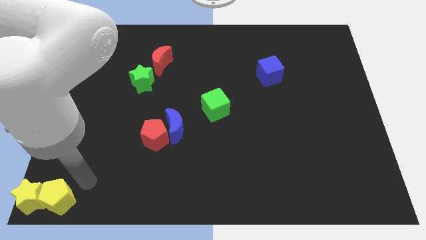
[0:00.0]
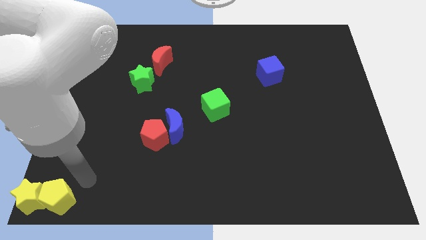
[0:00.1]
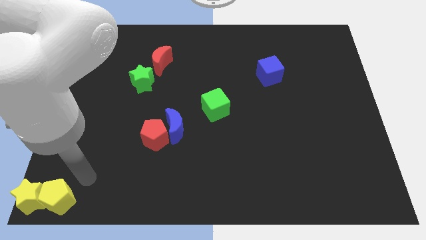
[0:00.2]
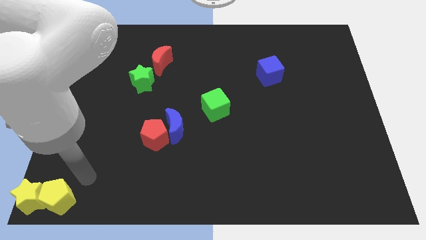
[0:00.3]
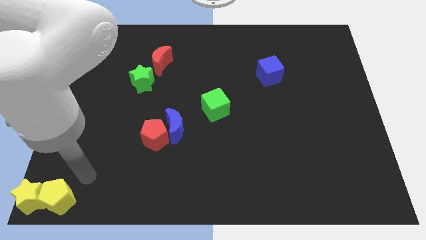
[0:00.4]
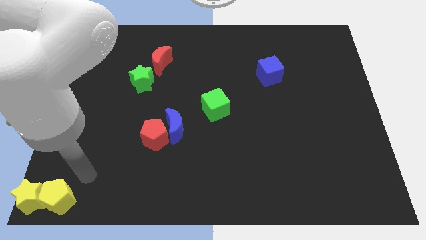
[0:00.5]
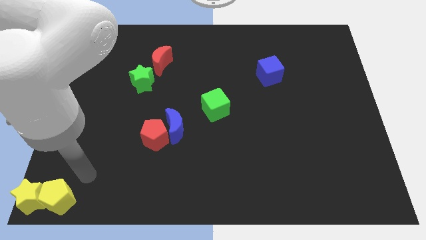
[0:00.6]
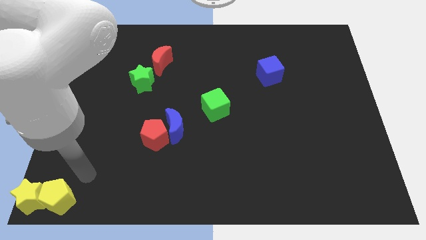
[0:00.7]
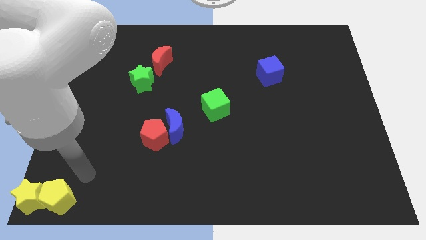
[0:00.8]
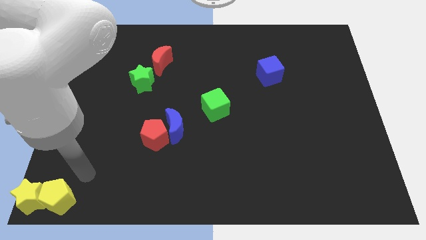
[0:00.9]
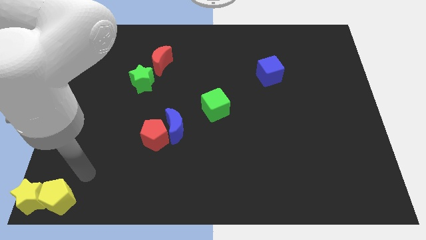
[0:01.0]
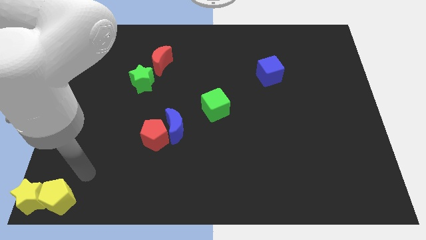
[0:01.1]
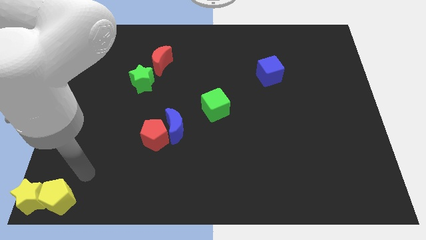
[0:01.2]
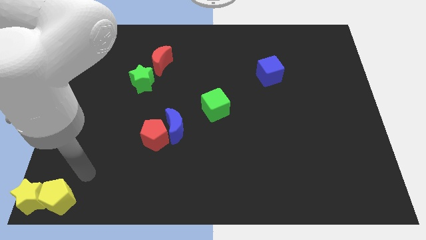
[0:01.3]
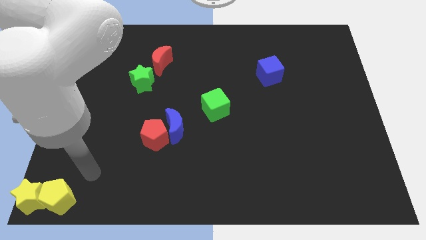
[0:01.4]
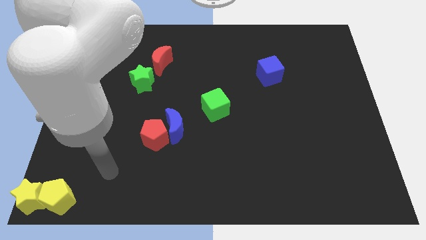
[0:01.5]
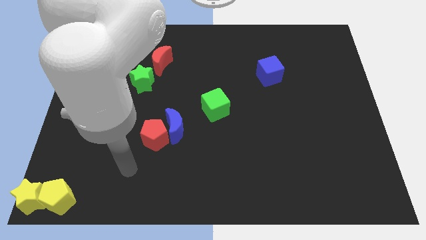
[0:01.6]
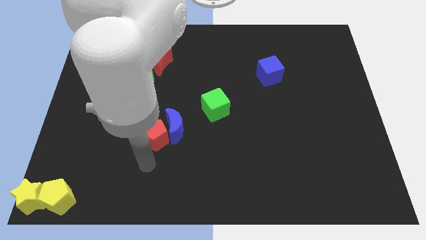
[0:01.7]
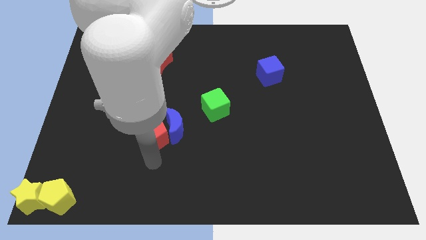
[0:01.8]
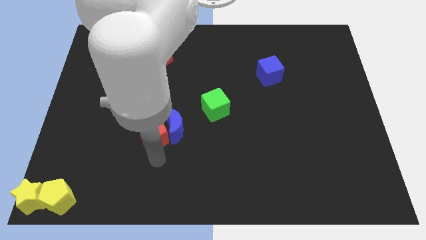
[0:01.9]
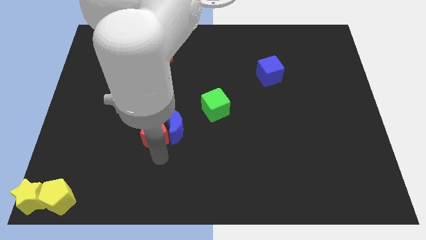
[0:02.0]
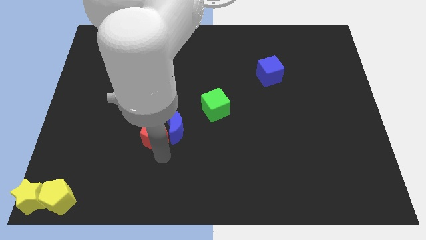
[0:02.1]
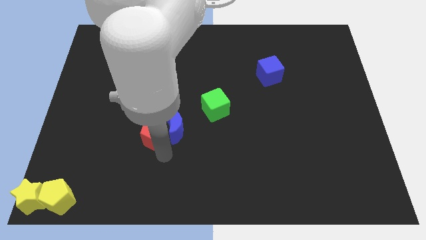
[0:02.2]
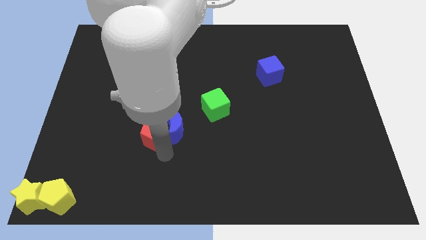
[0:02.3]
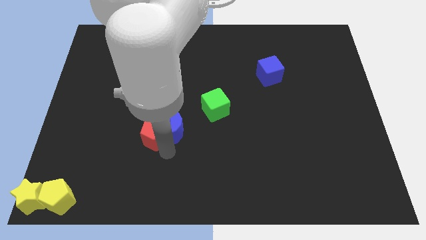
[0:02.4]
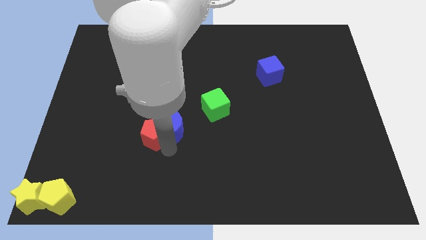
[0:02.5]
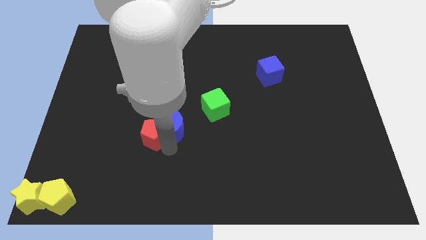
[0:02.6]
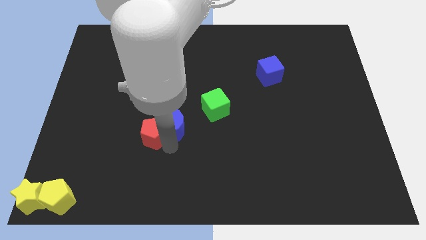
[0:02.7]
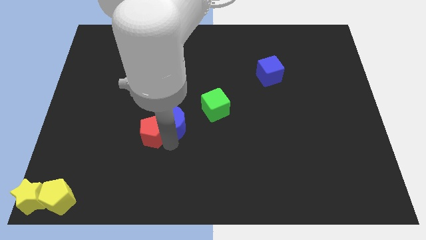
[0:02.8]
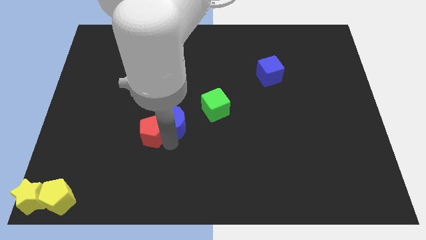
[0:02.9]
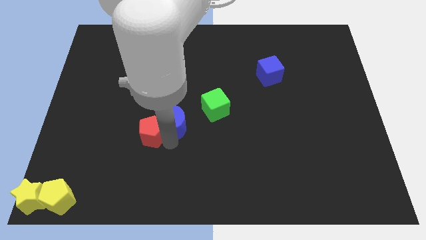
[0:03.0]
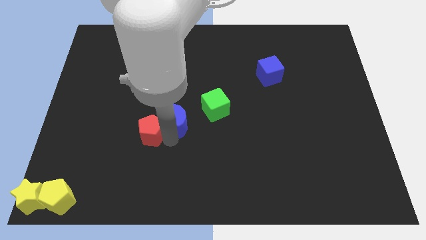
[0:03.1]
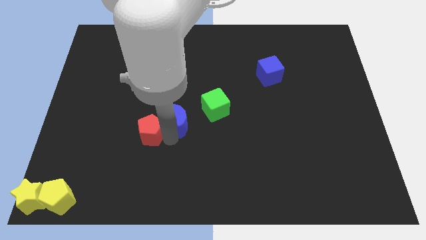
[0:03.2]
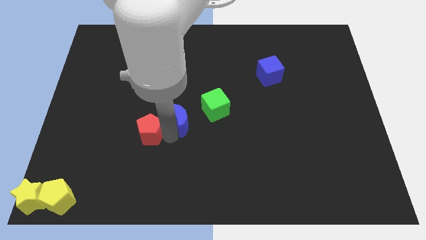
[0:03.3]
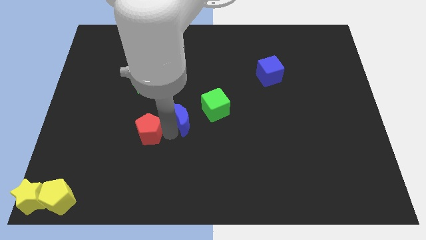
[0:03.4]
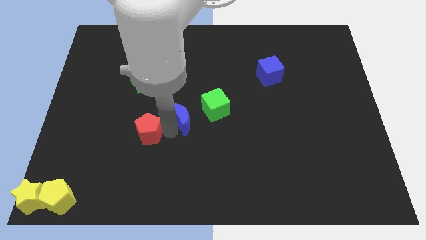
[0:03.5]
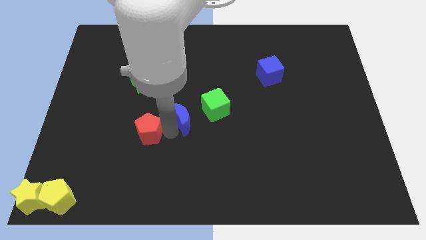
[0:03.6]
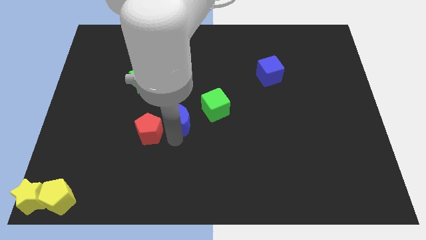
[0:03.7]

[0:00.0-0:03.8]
go and separate the red pentagon and the blue crescent

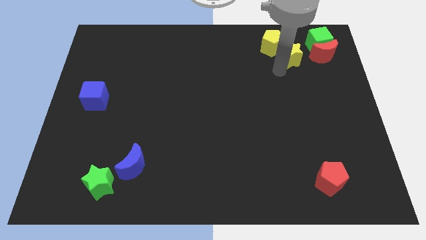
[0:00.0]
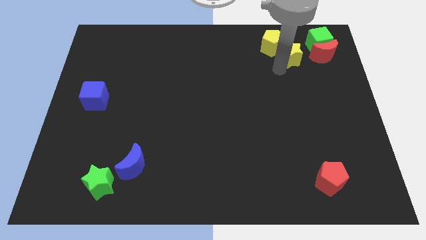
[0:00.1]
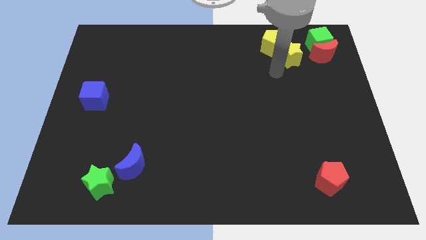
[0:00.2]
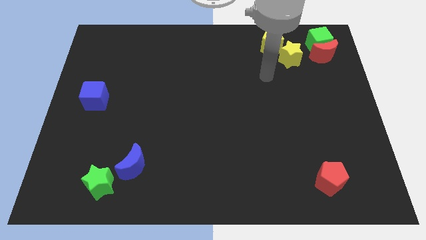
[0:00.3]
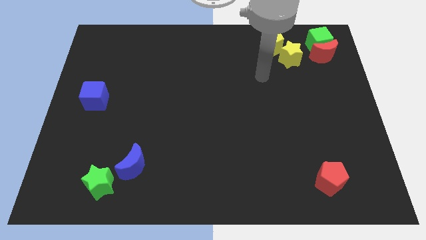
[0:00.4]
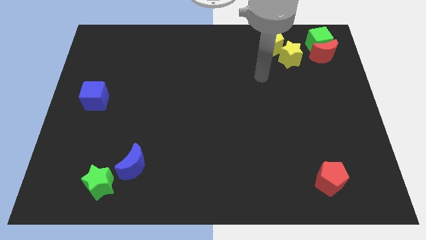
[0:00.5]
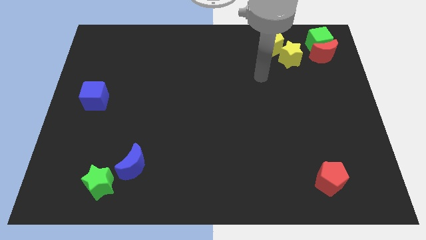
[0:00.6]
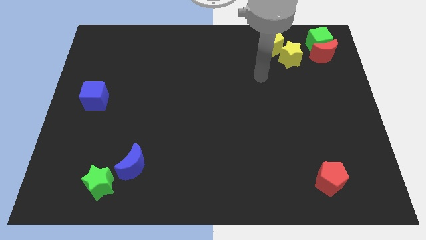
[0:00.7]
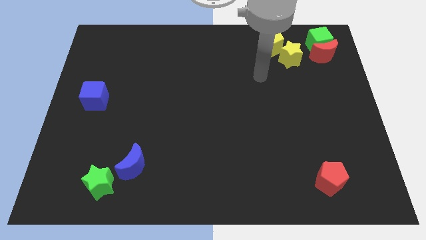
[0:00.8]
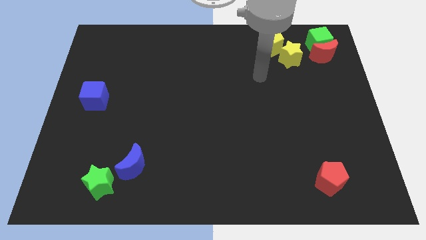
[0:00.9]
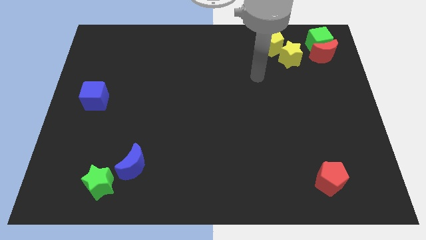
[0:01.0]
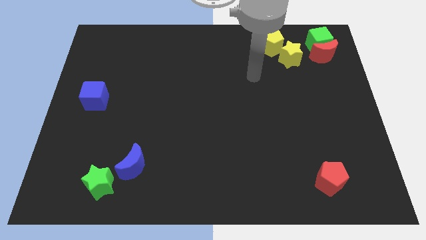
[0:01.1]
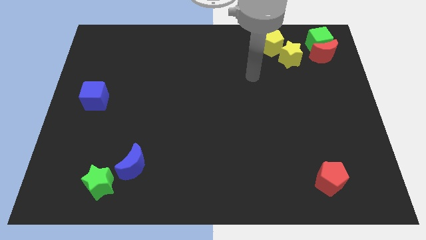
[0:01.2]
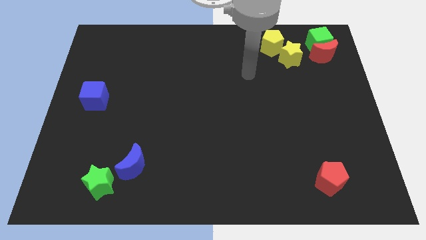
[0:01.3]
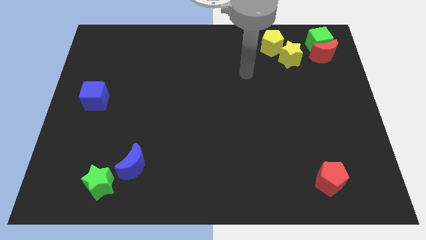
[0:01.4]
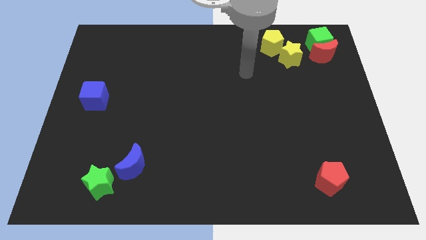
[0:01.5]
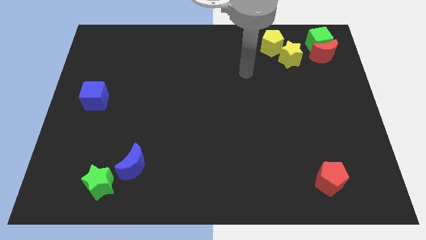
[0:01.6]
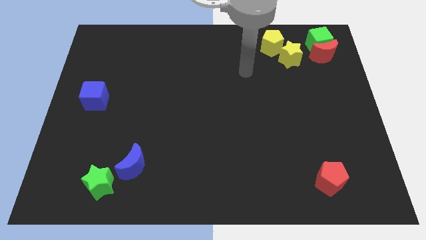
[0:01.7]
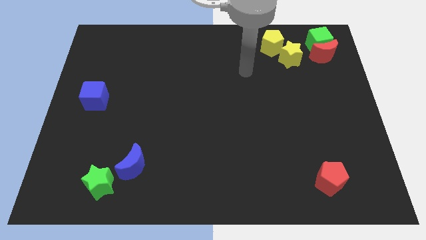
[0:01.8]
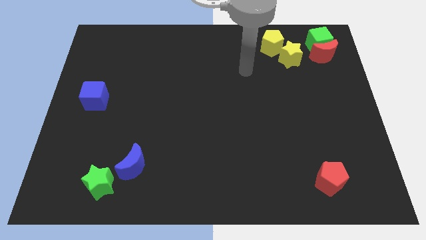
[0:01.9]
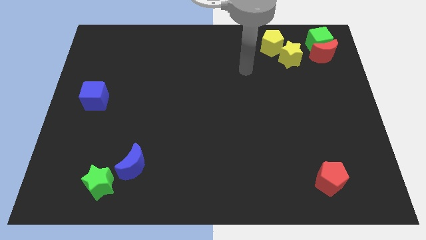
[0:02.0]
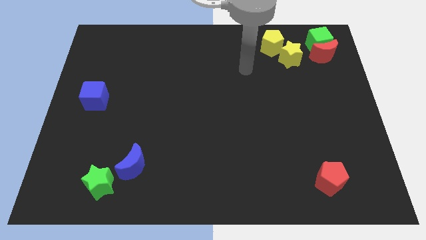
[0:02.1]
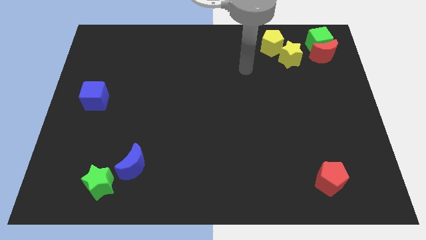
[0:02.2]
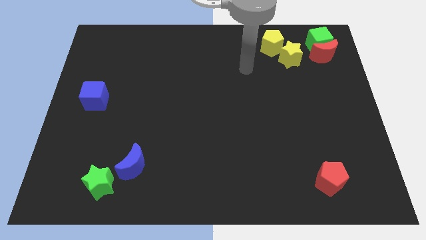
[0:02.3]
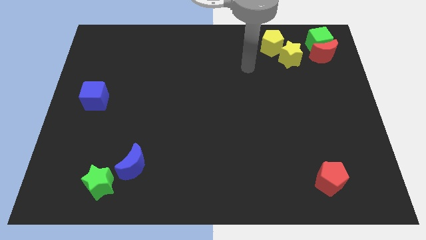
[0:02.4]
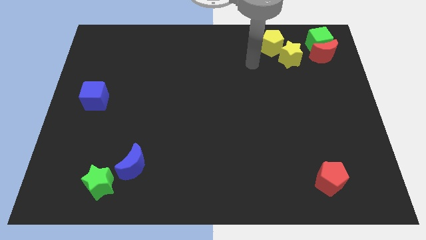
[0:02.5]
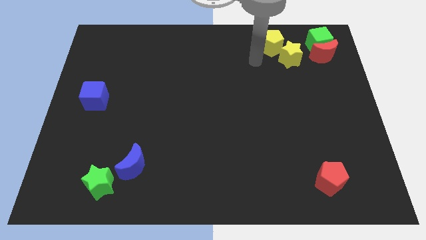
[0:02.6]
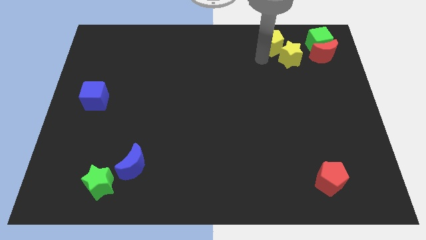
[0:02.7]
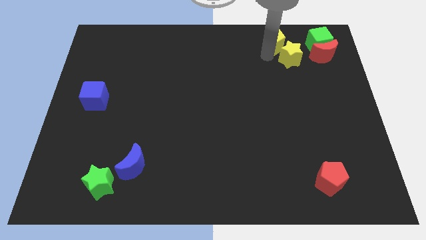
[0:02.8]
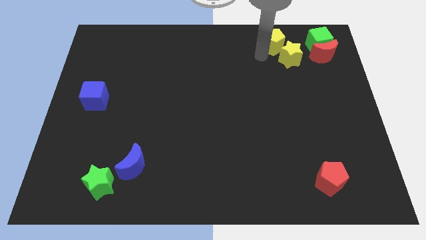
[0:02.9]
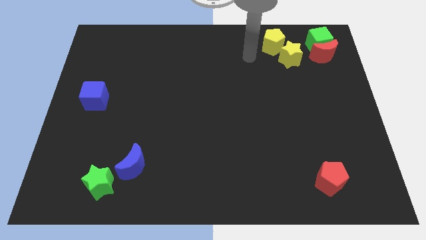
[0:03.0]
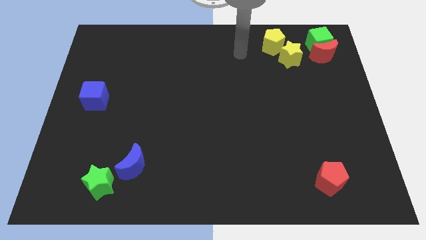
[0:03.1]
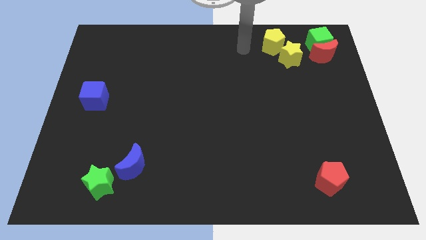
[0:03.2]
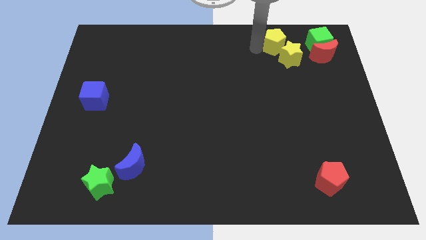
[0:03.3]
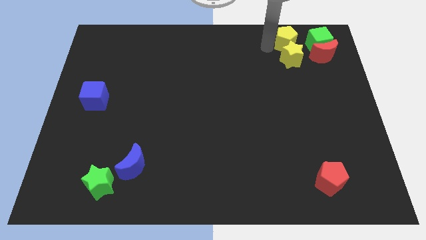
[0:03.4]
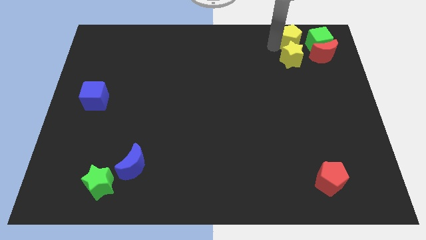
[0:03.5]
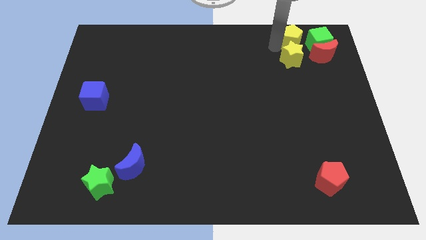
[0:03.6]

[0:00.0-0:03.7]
move the yellow pentagon to the left side to the green cube

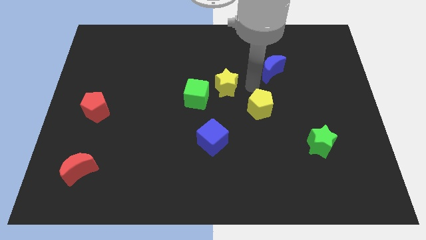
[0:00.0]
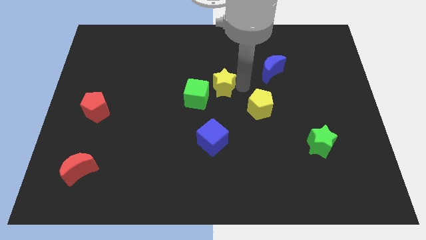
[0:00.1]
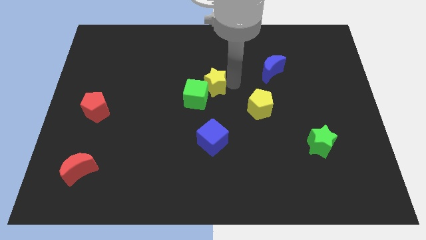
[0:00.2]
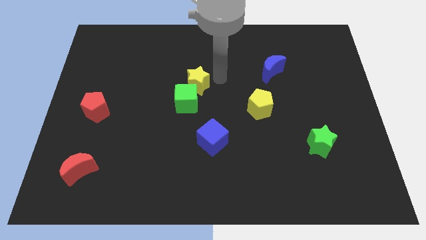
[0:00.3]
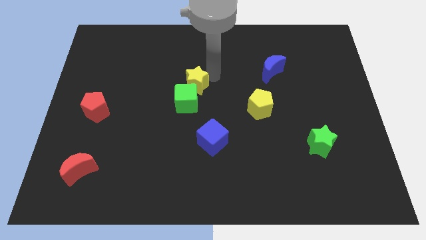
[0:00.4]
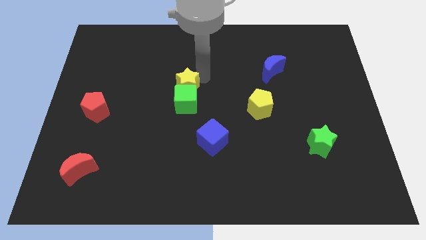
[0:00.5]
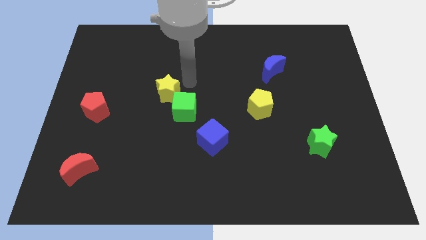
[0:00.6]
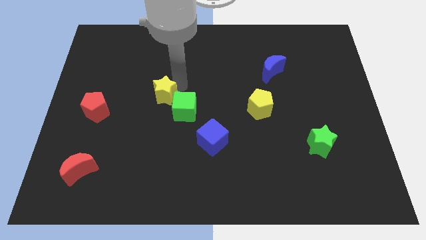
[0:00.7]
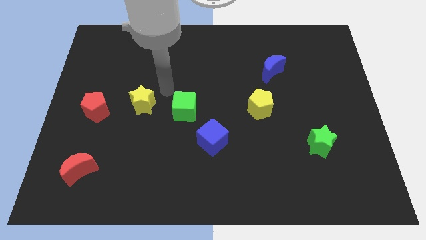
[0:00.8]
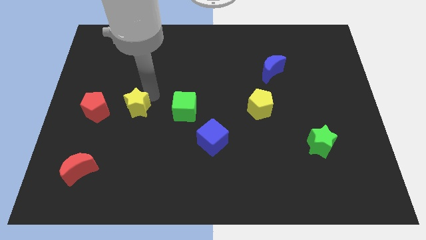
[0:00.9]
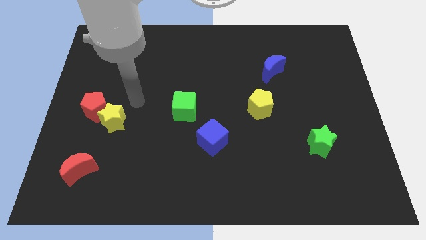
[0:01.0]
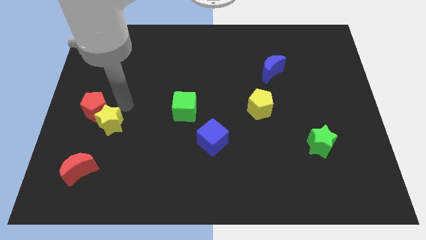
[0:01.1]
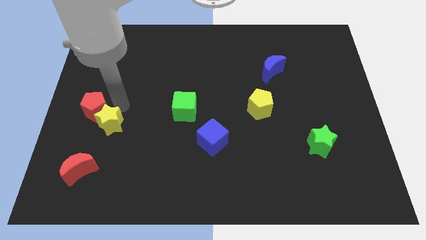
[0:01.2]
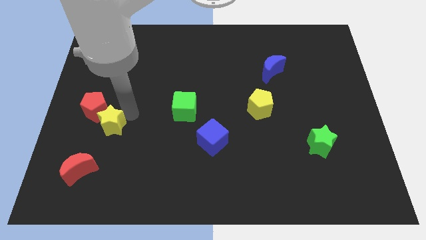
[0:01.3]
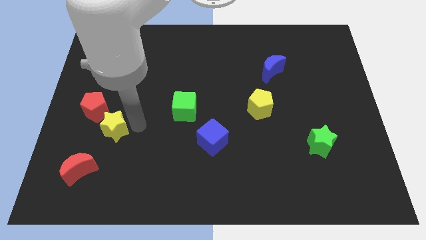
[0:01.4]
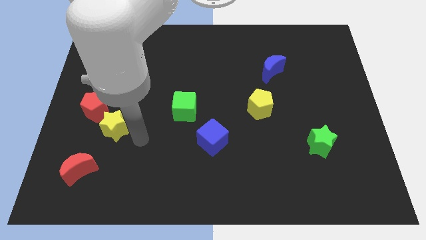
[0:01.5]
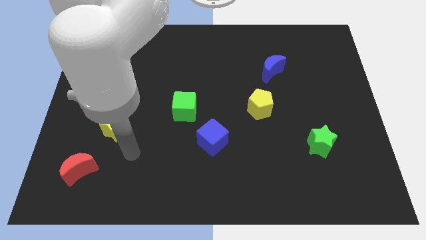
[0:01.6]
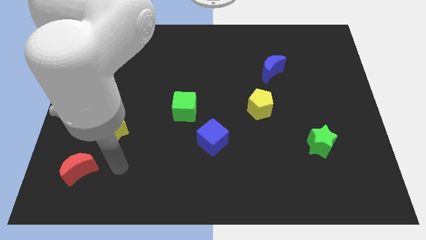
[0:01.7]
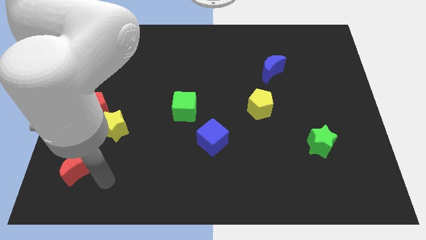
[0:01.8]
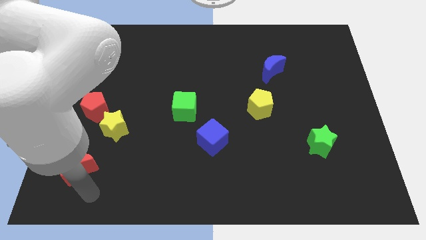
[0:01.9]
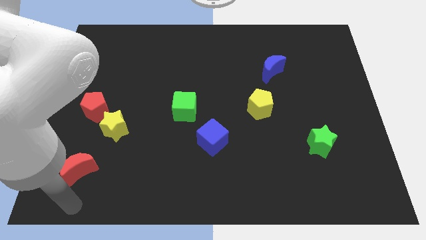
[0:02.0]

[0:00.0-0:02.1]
place the yellow star towards the bottom right side of the red pentagon
